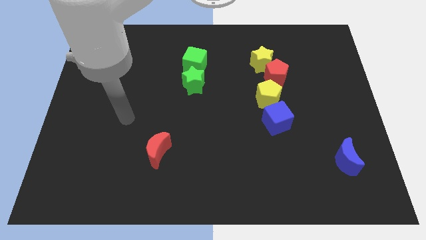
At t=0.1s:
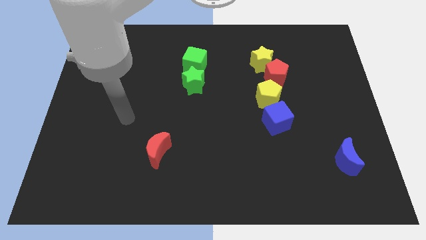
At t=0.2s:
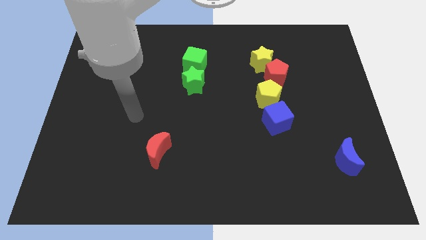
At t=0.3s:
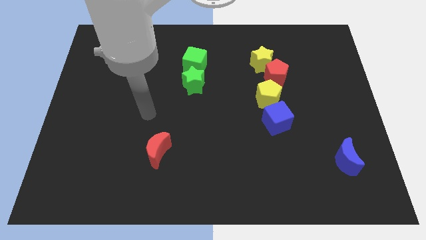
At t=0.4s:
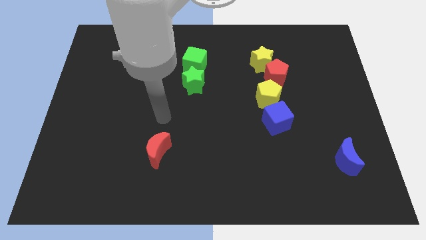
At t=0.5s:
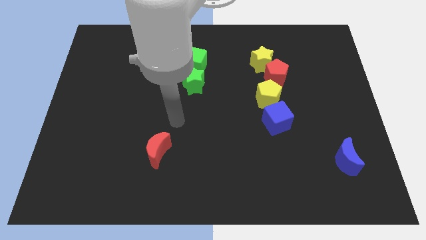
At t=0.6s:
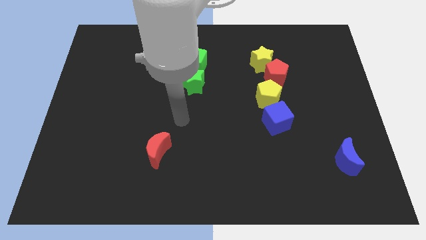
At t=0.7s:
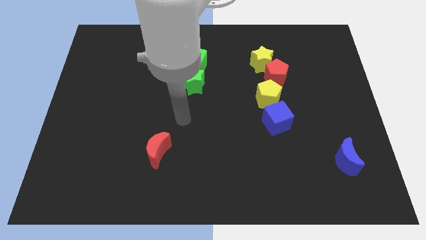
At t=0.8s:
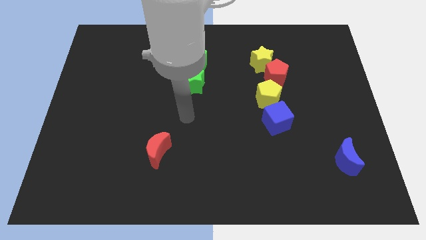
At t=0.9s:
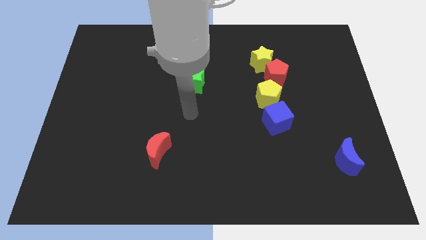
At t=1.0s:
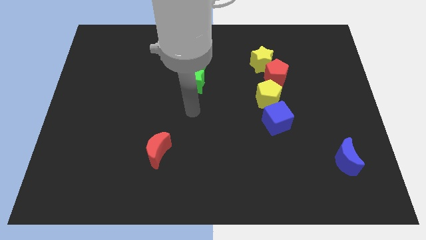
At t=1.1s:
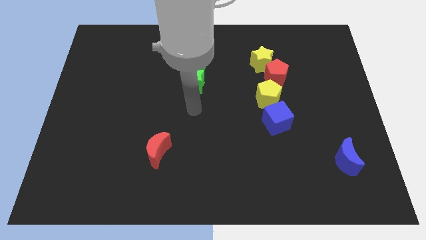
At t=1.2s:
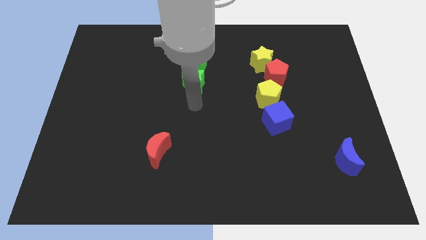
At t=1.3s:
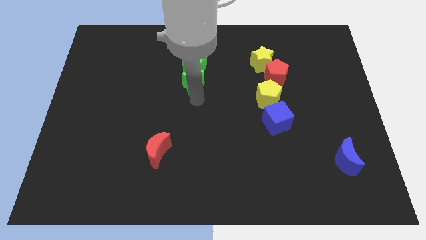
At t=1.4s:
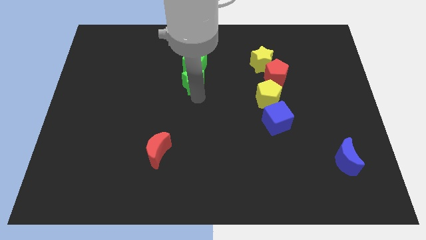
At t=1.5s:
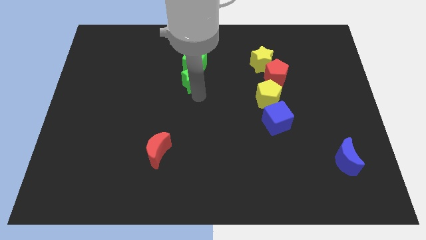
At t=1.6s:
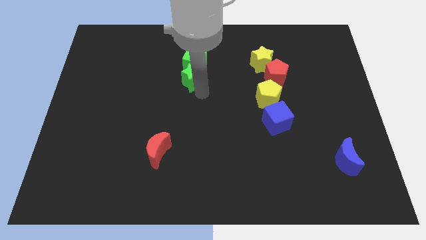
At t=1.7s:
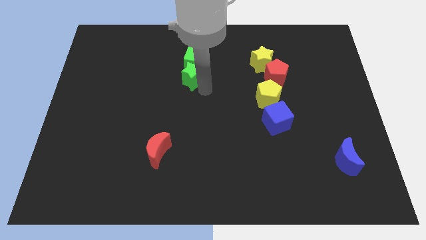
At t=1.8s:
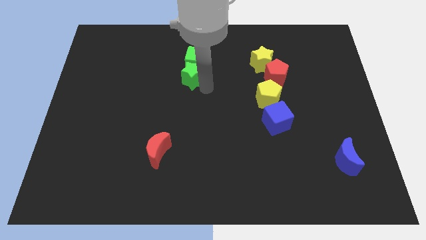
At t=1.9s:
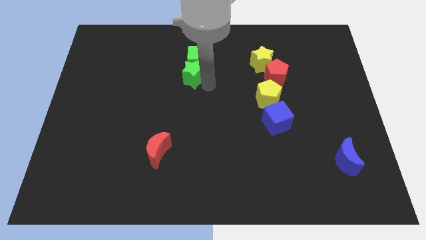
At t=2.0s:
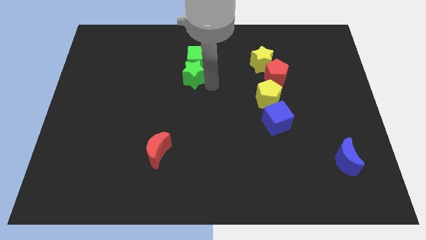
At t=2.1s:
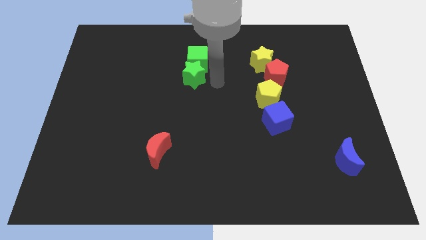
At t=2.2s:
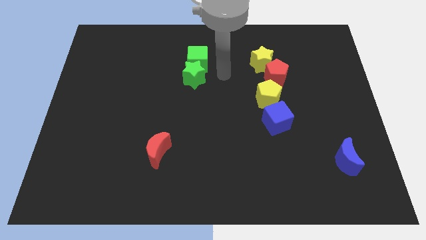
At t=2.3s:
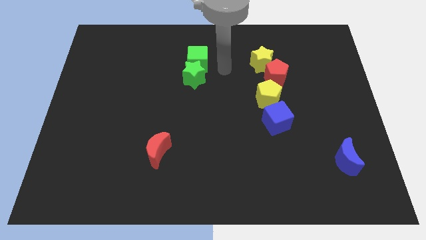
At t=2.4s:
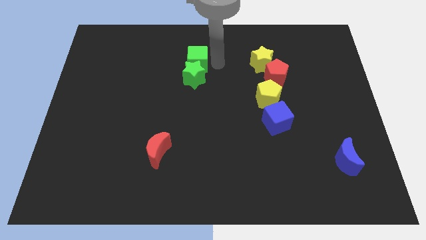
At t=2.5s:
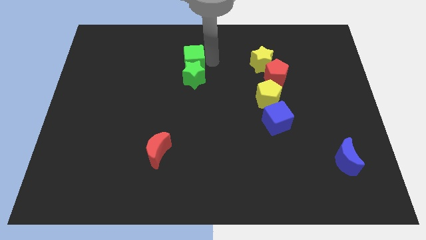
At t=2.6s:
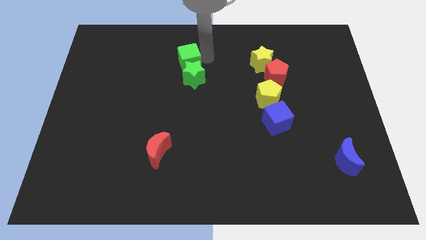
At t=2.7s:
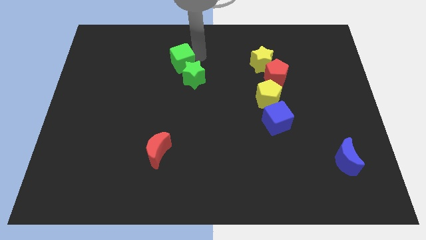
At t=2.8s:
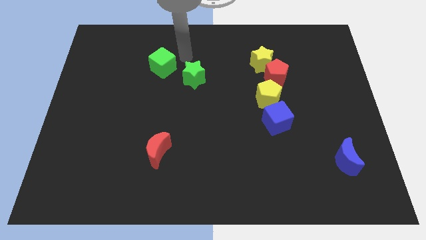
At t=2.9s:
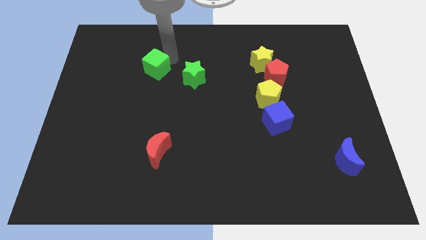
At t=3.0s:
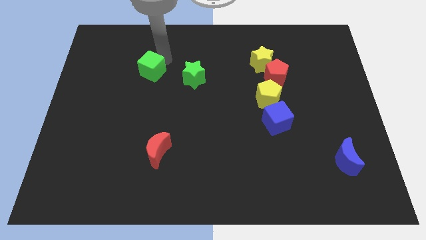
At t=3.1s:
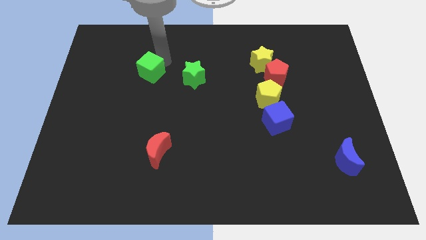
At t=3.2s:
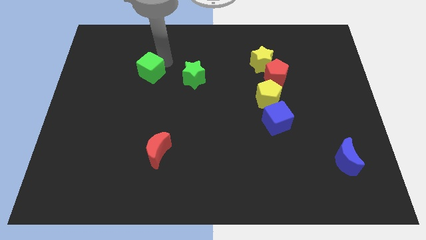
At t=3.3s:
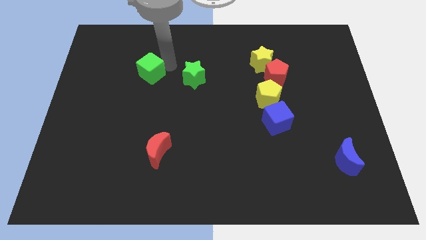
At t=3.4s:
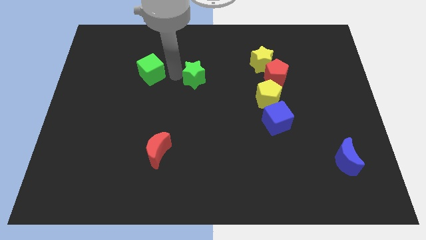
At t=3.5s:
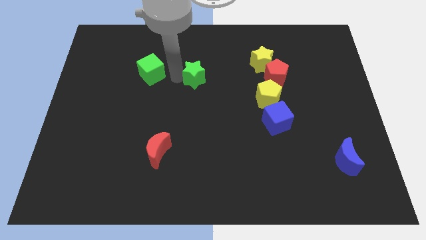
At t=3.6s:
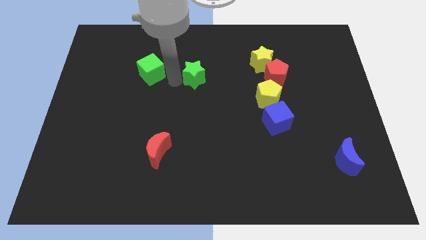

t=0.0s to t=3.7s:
move the green cube to the left of the green star

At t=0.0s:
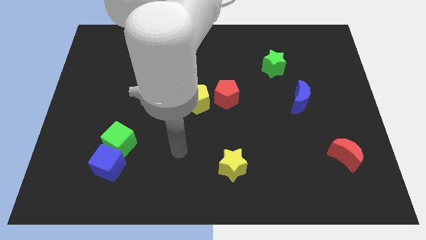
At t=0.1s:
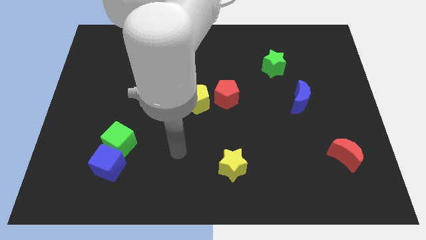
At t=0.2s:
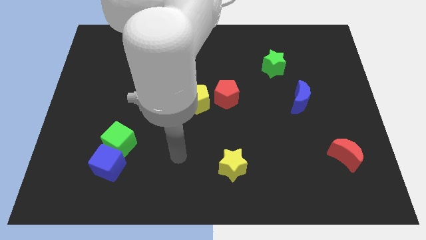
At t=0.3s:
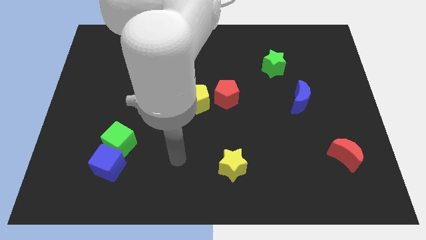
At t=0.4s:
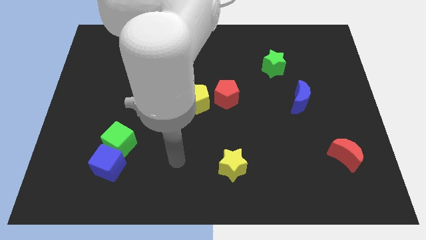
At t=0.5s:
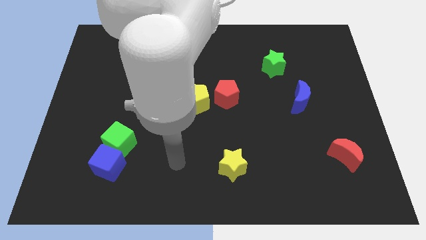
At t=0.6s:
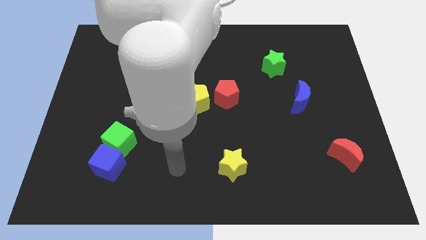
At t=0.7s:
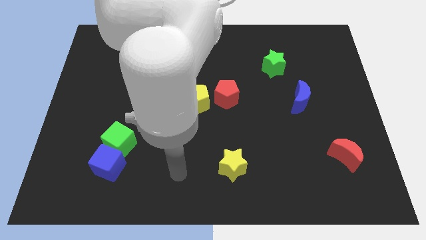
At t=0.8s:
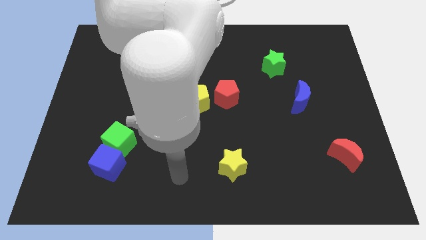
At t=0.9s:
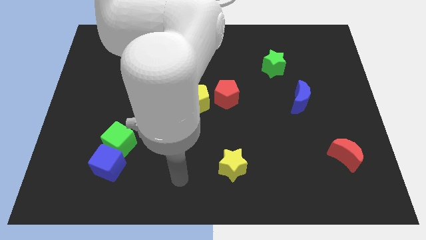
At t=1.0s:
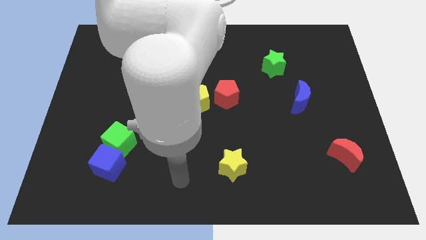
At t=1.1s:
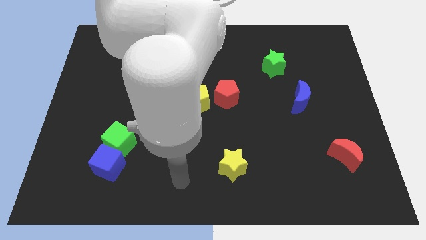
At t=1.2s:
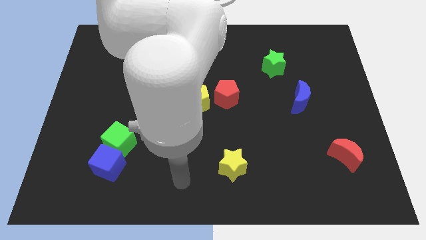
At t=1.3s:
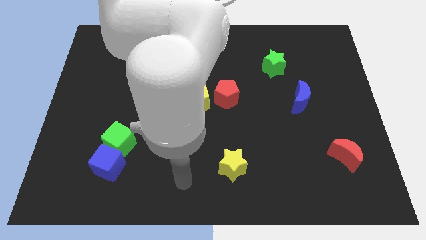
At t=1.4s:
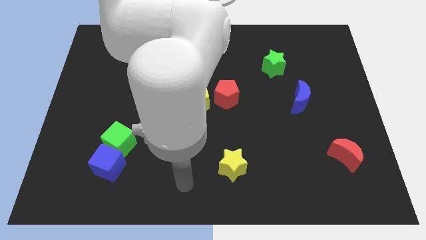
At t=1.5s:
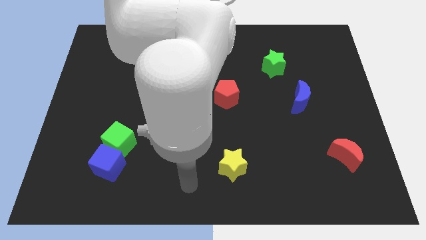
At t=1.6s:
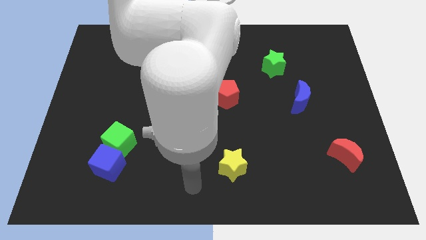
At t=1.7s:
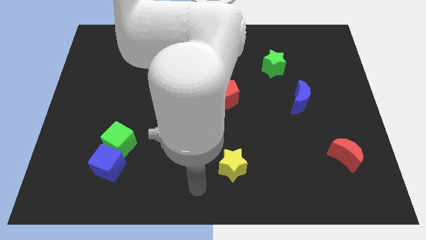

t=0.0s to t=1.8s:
move your arm towards the bottom of the board

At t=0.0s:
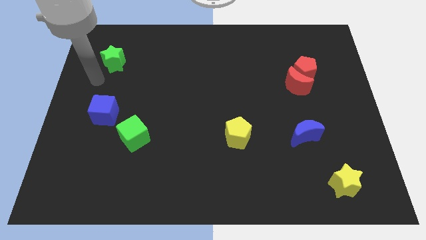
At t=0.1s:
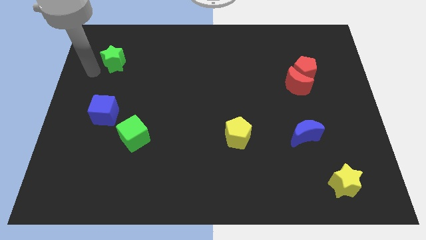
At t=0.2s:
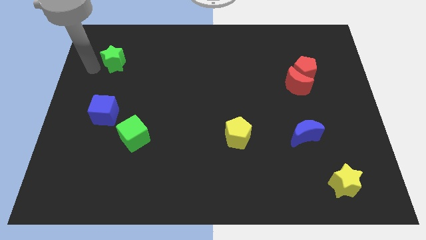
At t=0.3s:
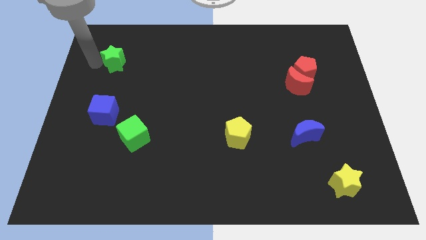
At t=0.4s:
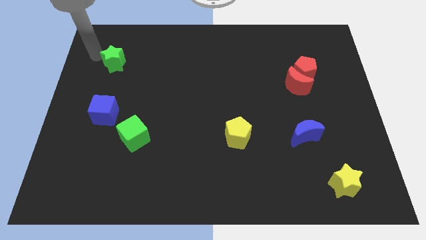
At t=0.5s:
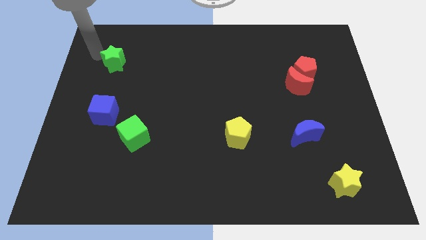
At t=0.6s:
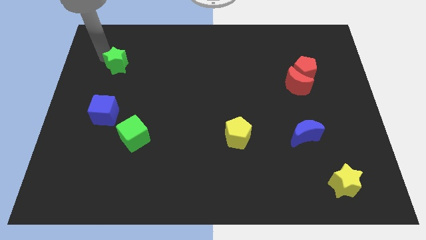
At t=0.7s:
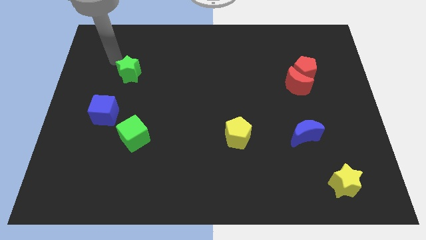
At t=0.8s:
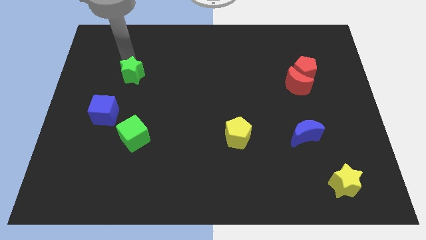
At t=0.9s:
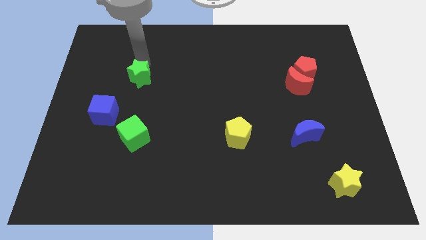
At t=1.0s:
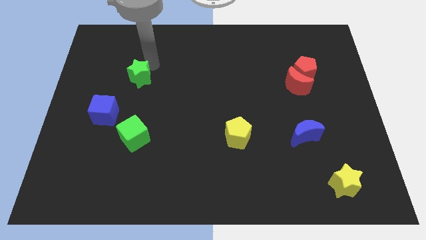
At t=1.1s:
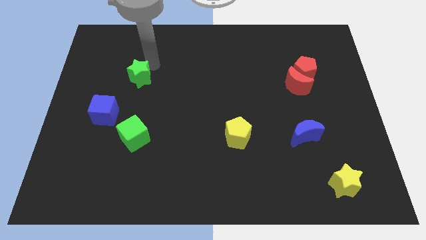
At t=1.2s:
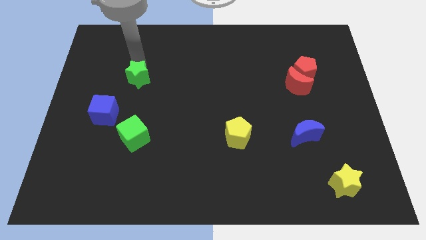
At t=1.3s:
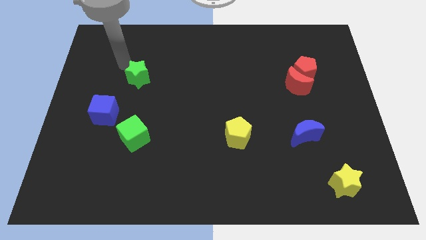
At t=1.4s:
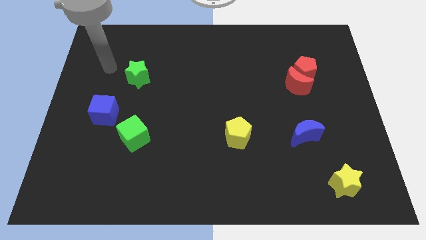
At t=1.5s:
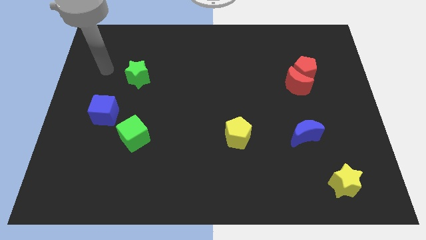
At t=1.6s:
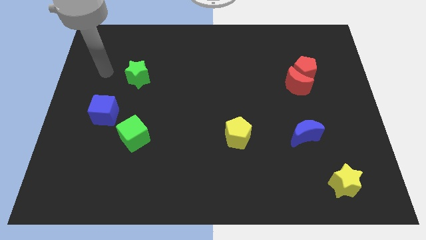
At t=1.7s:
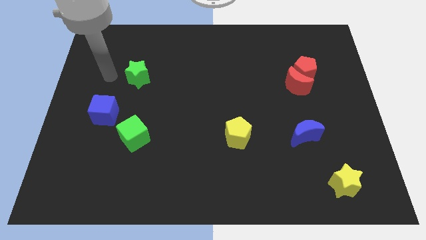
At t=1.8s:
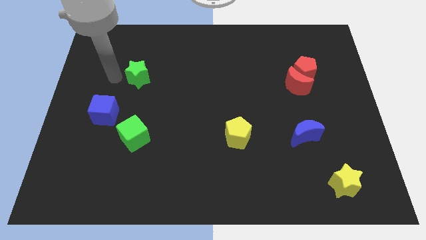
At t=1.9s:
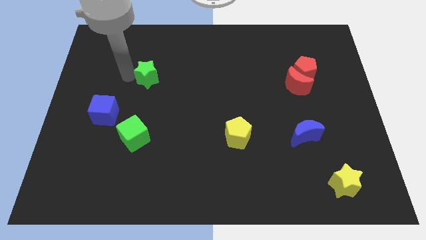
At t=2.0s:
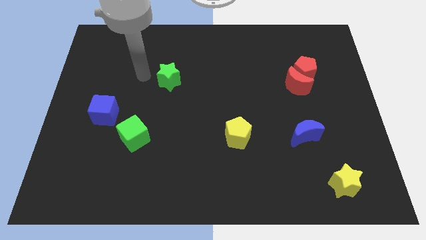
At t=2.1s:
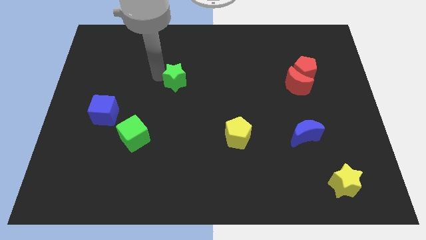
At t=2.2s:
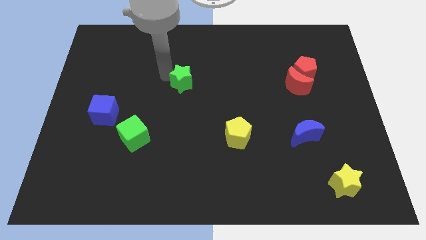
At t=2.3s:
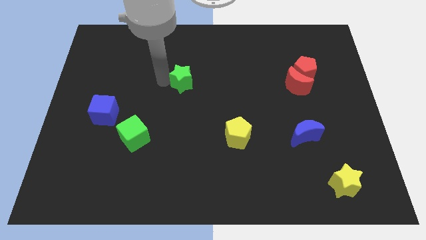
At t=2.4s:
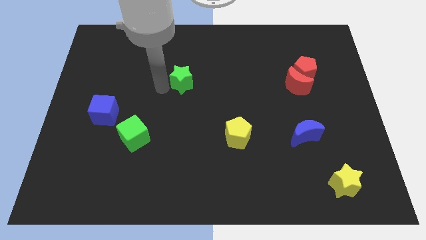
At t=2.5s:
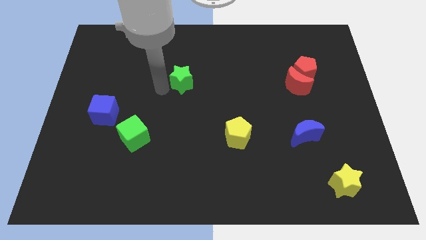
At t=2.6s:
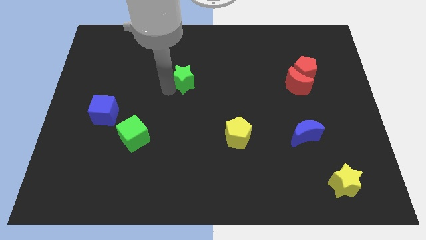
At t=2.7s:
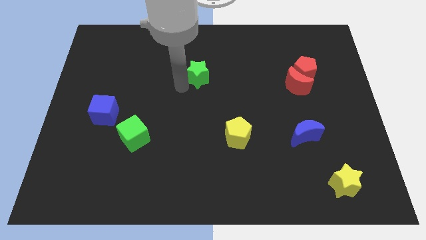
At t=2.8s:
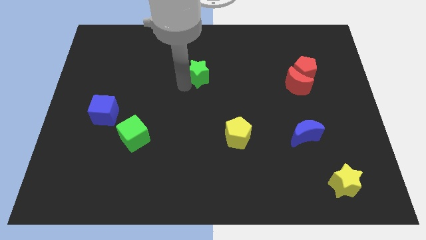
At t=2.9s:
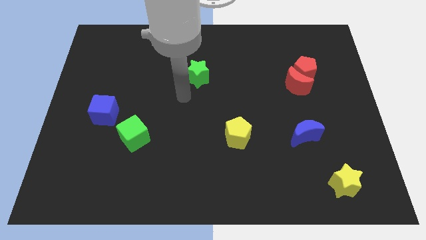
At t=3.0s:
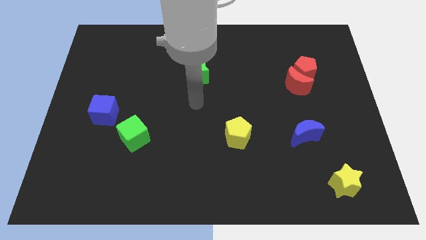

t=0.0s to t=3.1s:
move the green star diagonally on the top right side of the green cube

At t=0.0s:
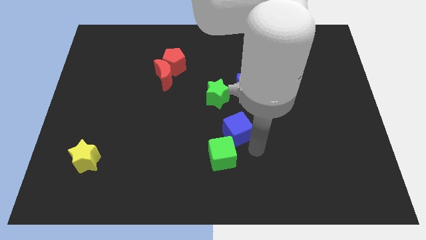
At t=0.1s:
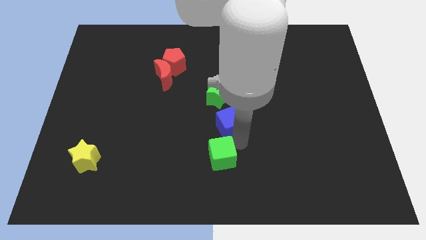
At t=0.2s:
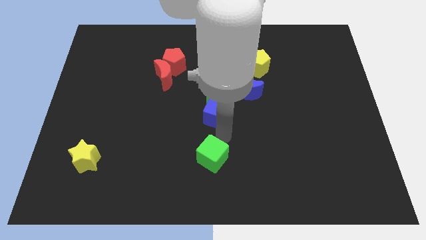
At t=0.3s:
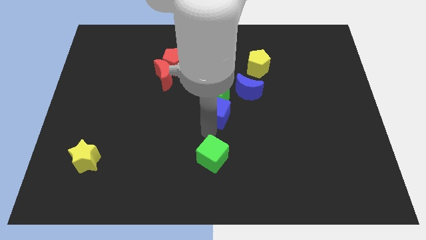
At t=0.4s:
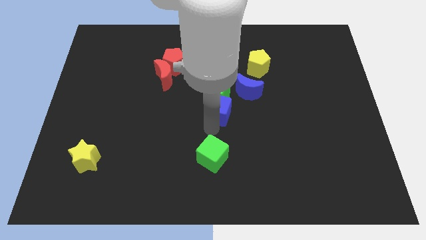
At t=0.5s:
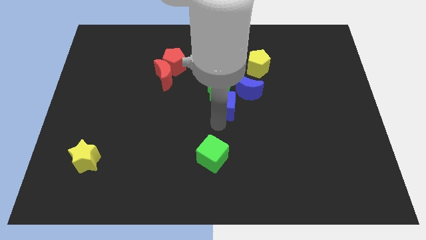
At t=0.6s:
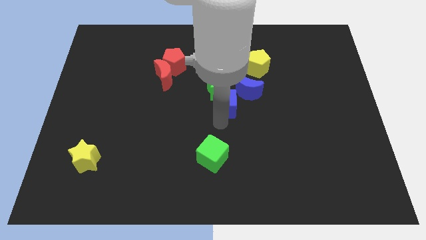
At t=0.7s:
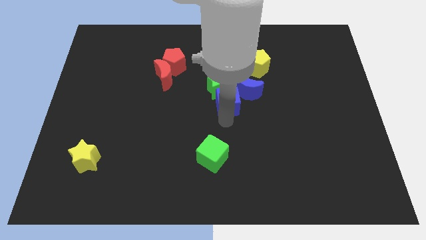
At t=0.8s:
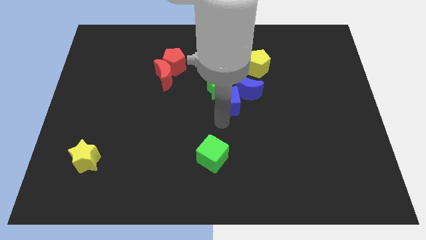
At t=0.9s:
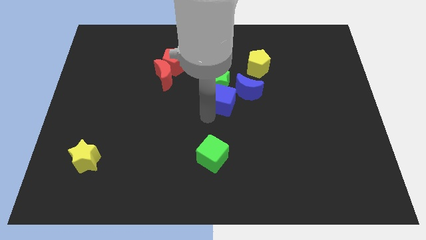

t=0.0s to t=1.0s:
push the blue cube towards the green star
